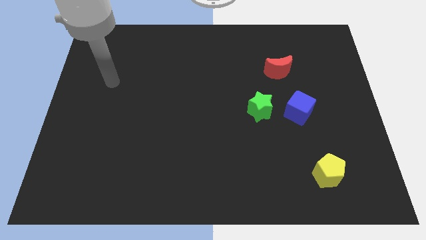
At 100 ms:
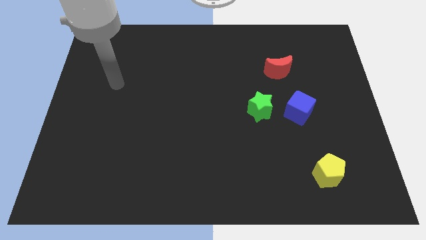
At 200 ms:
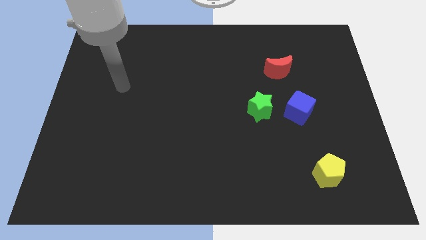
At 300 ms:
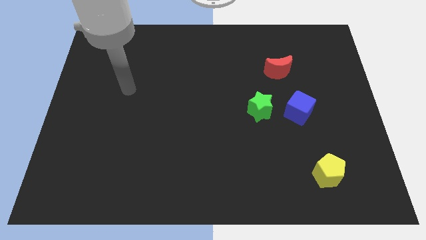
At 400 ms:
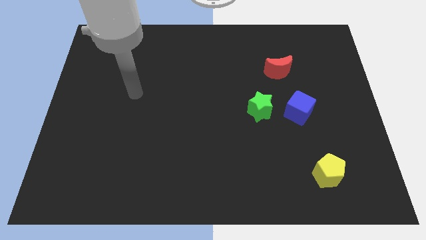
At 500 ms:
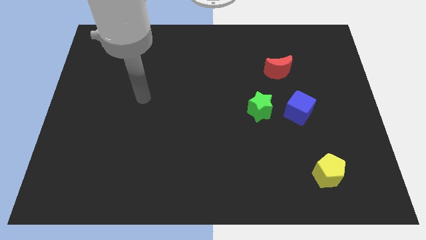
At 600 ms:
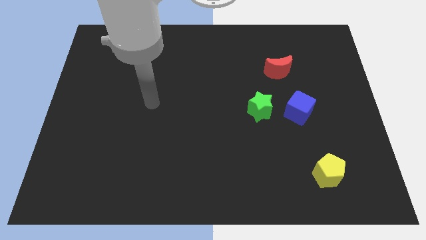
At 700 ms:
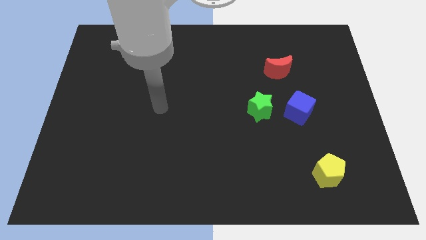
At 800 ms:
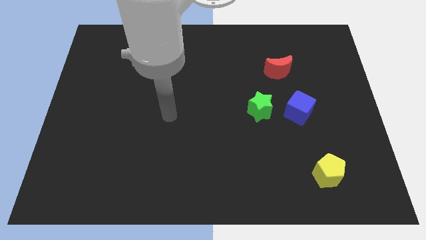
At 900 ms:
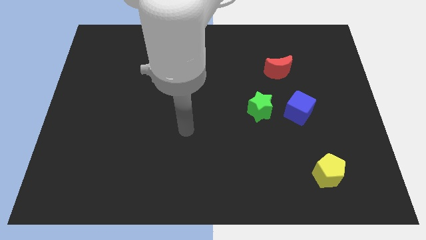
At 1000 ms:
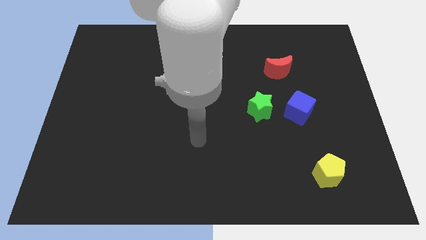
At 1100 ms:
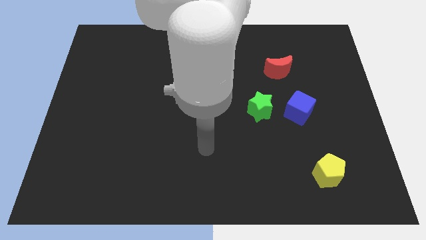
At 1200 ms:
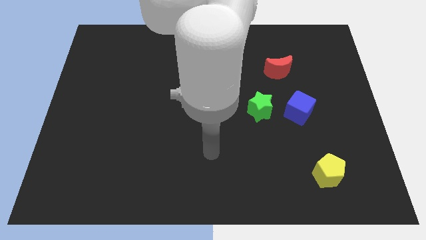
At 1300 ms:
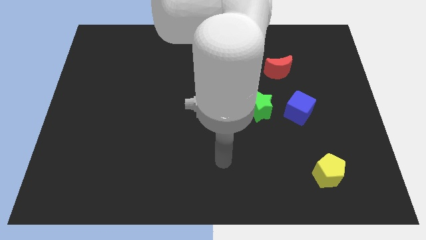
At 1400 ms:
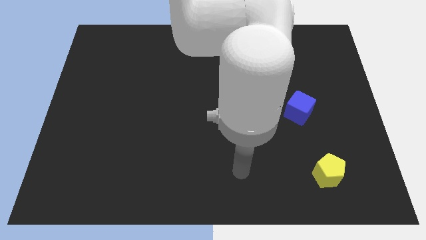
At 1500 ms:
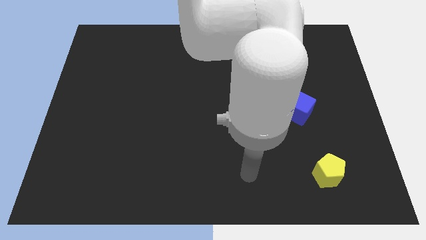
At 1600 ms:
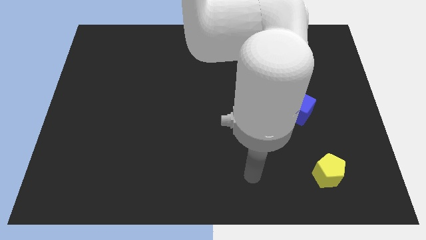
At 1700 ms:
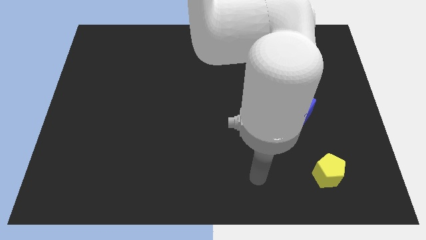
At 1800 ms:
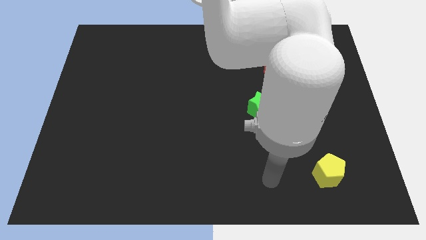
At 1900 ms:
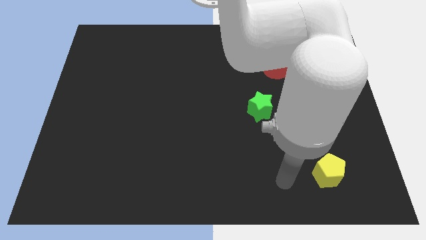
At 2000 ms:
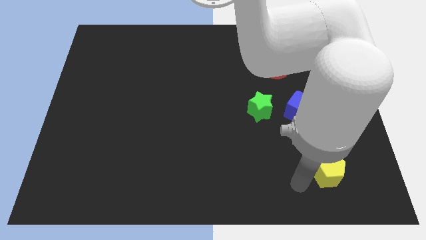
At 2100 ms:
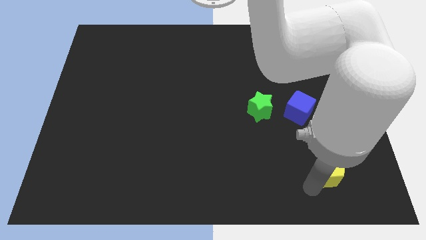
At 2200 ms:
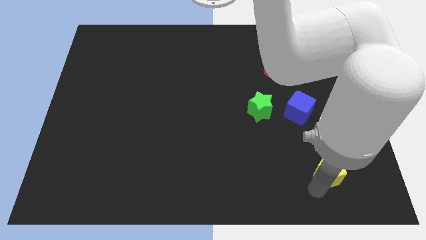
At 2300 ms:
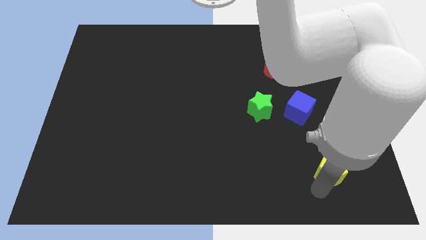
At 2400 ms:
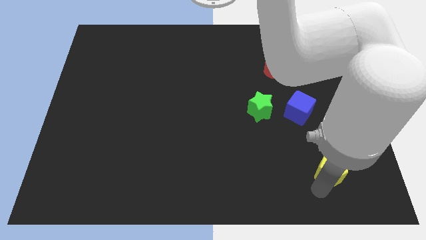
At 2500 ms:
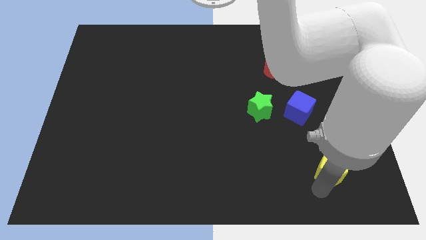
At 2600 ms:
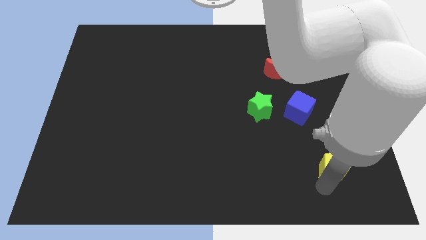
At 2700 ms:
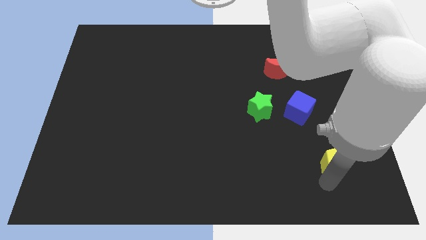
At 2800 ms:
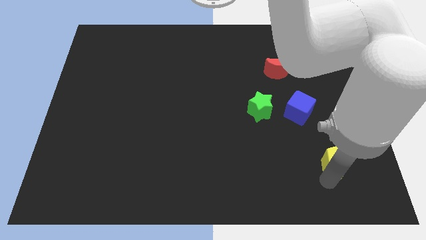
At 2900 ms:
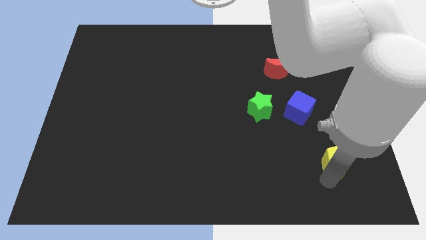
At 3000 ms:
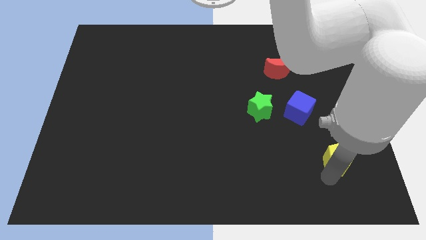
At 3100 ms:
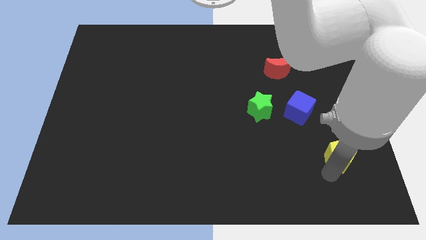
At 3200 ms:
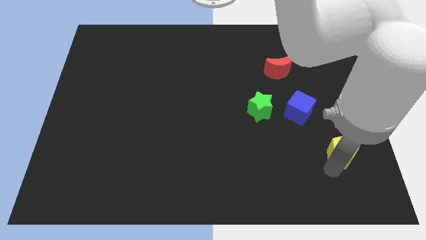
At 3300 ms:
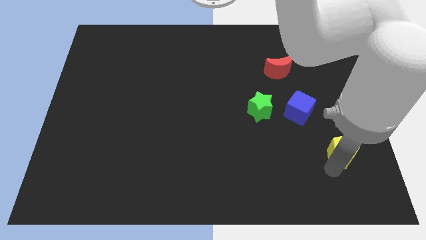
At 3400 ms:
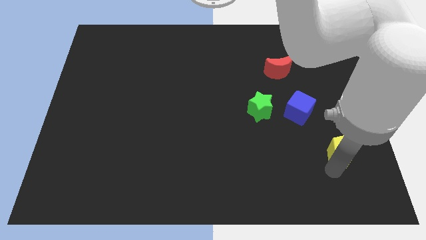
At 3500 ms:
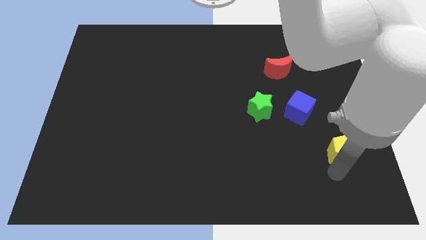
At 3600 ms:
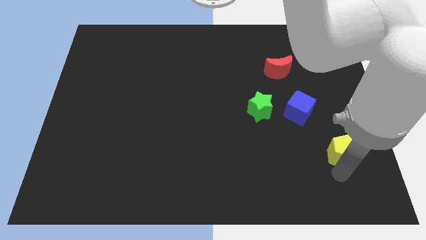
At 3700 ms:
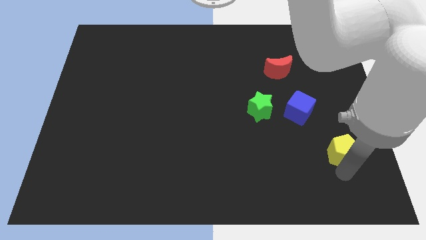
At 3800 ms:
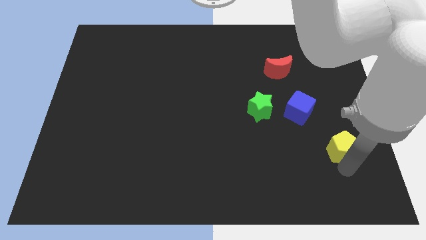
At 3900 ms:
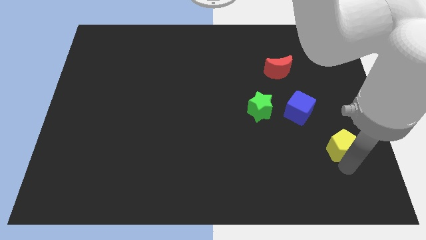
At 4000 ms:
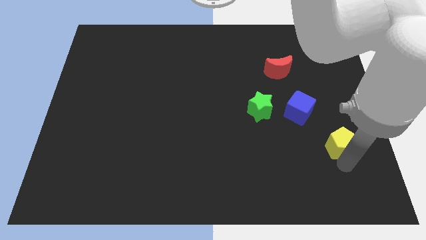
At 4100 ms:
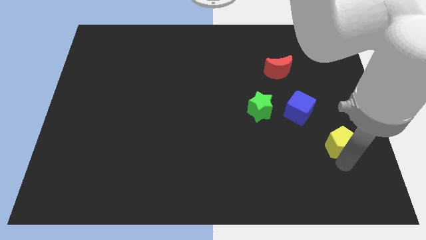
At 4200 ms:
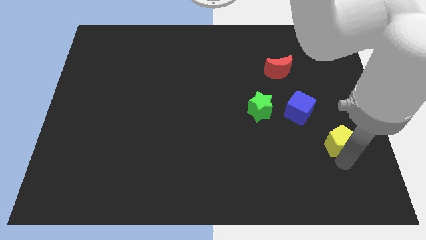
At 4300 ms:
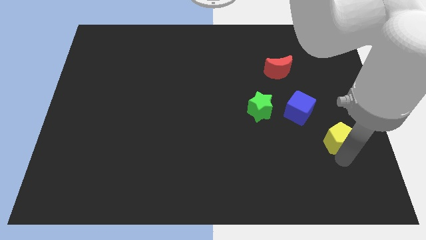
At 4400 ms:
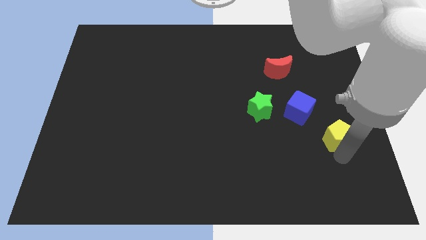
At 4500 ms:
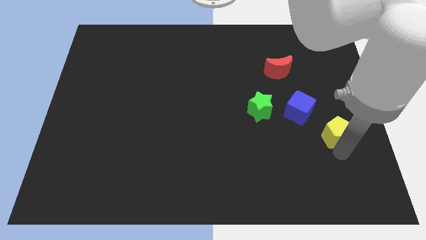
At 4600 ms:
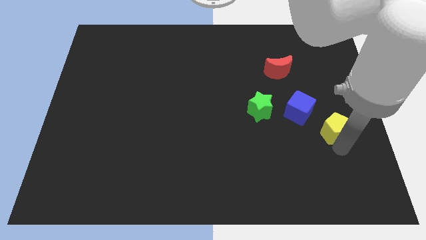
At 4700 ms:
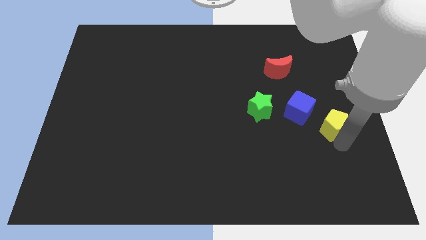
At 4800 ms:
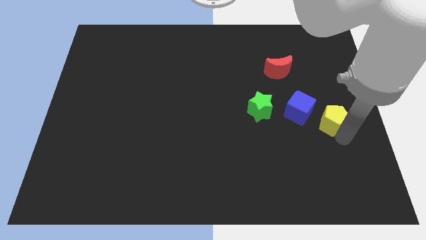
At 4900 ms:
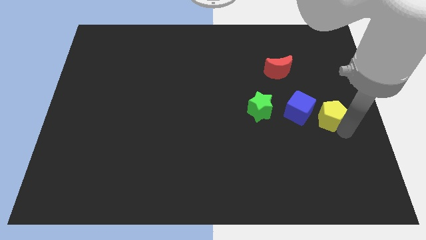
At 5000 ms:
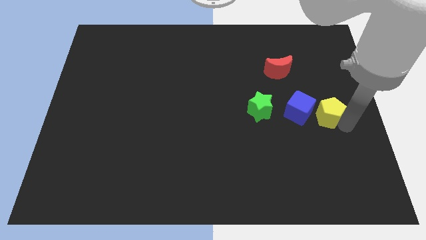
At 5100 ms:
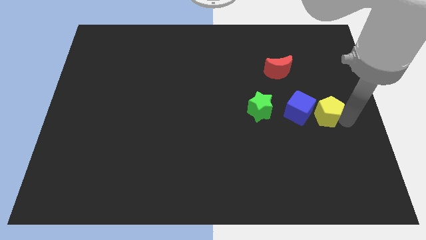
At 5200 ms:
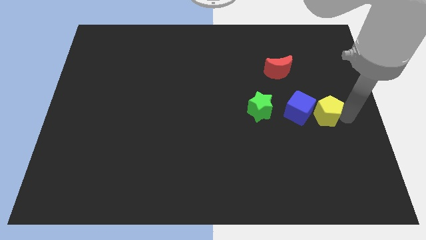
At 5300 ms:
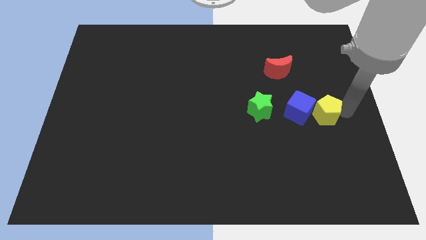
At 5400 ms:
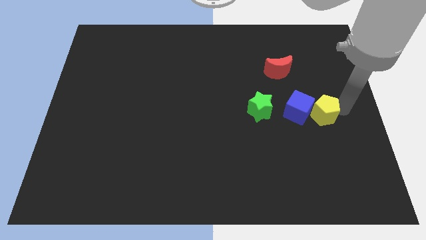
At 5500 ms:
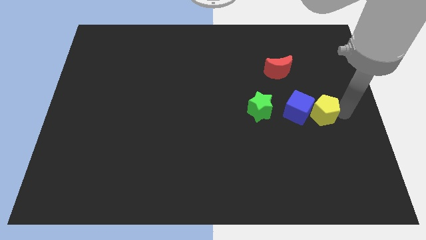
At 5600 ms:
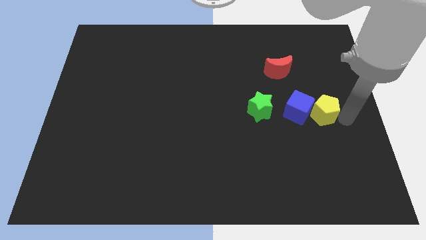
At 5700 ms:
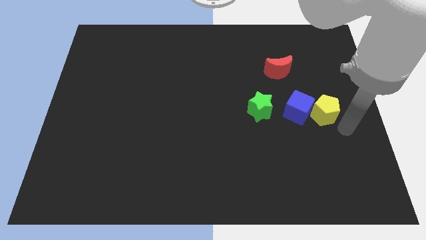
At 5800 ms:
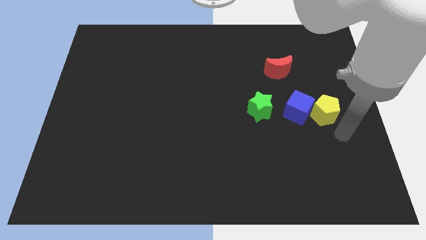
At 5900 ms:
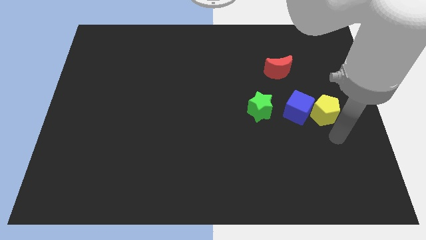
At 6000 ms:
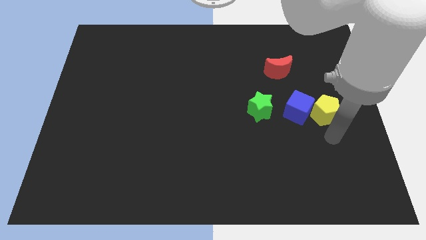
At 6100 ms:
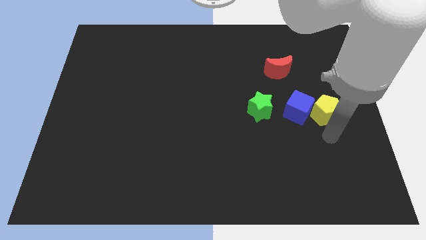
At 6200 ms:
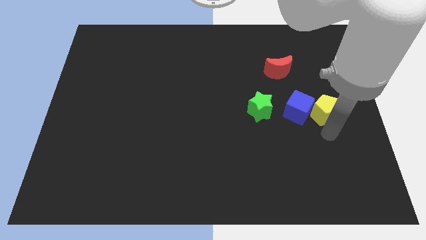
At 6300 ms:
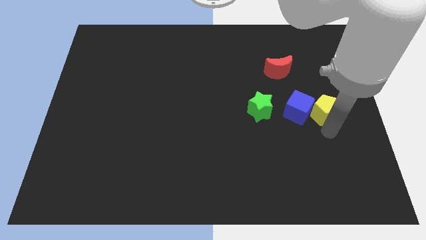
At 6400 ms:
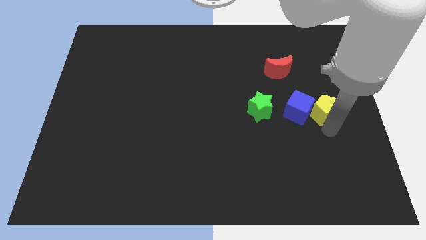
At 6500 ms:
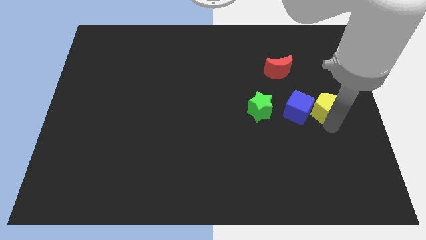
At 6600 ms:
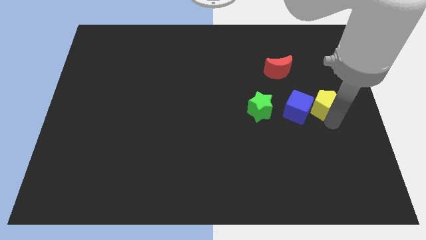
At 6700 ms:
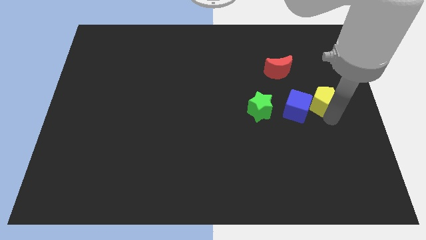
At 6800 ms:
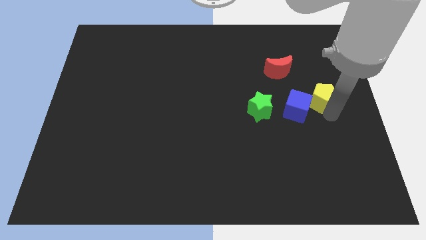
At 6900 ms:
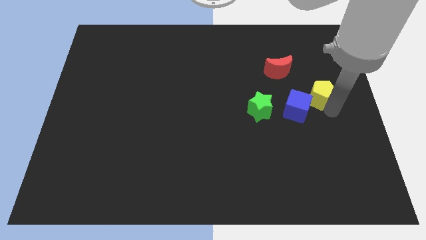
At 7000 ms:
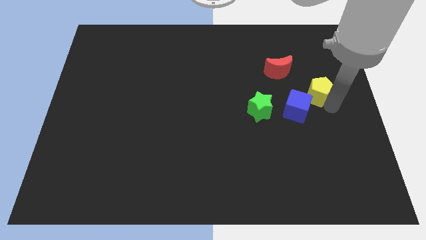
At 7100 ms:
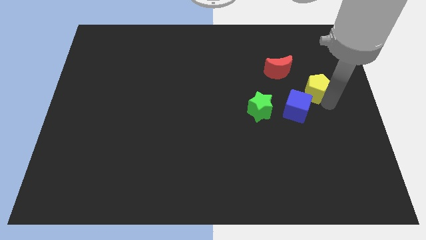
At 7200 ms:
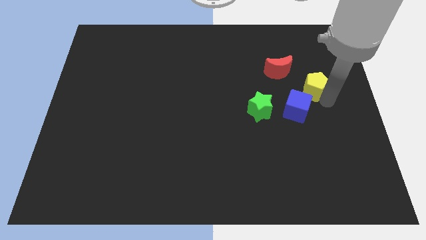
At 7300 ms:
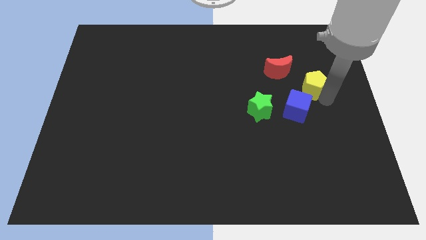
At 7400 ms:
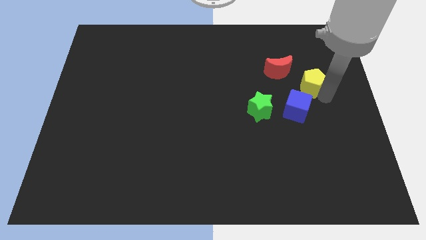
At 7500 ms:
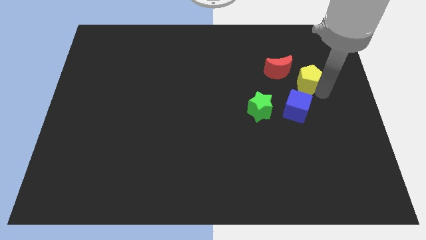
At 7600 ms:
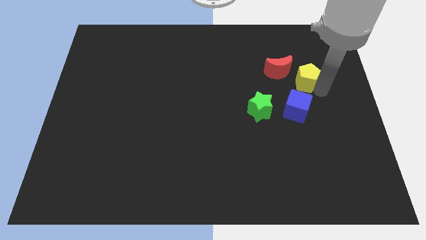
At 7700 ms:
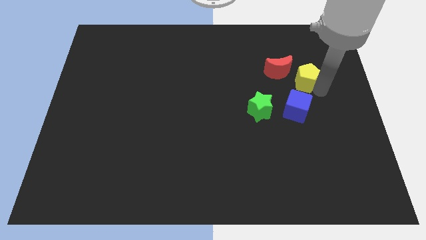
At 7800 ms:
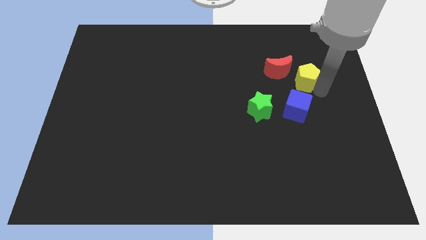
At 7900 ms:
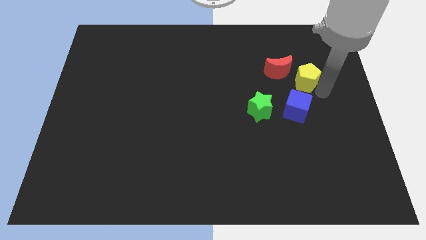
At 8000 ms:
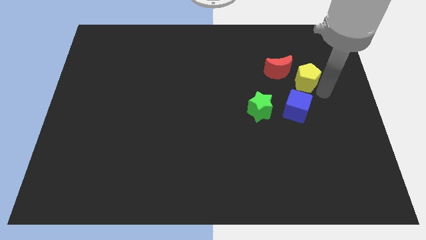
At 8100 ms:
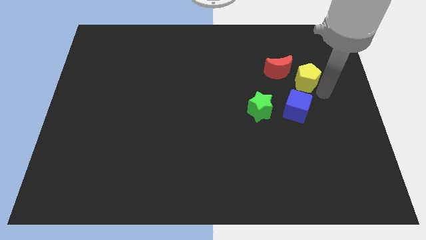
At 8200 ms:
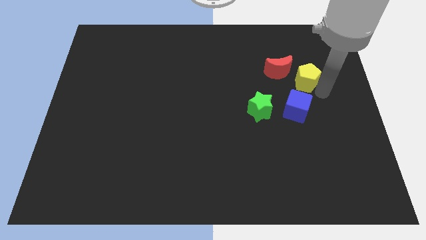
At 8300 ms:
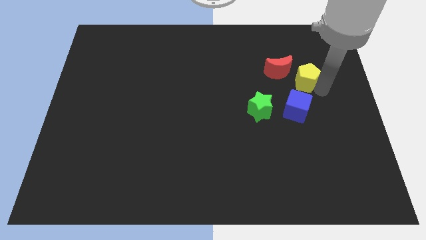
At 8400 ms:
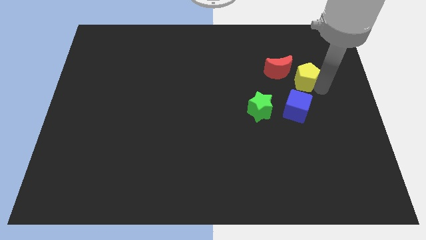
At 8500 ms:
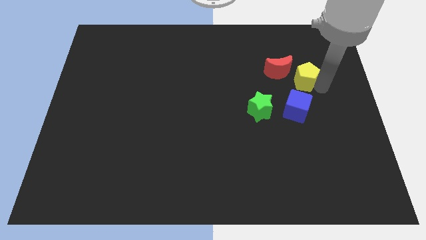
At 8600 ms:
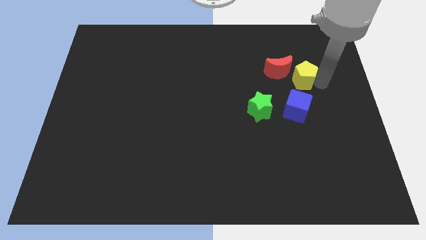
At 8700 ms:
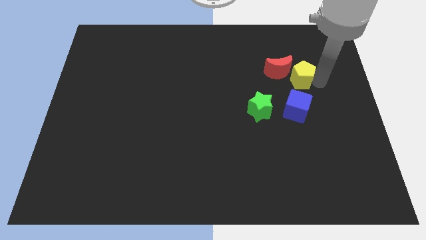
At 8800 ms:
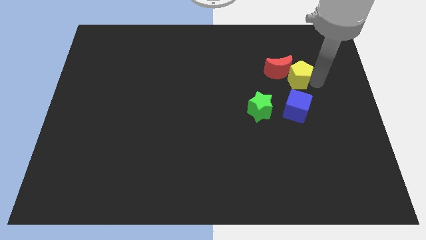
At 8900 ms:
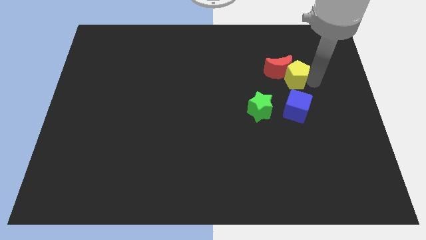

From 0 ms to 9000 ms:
put the yellow pentagon close to the moon
